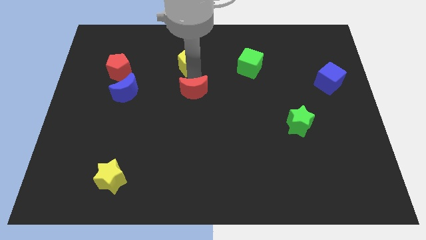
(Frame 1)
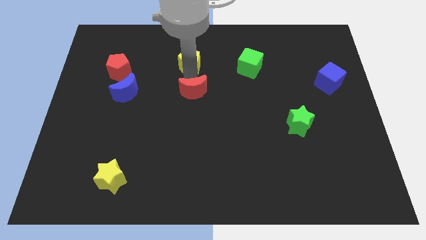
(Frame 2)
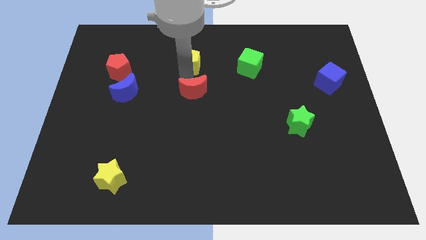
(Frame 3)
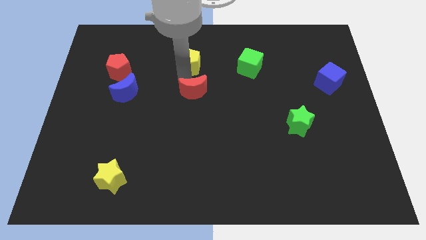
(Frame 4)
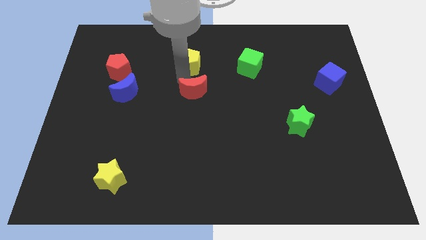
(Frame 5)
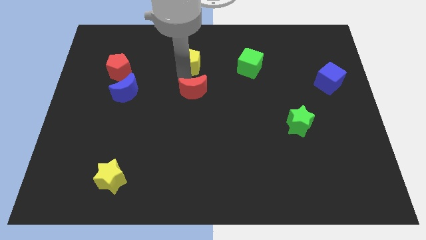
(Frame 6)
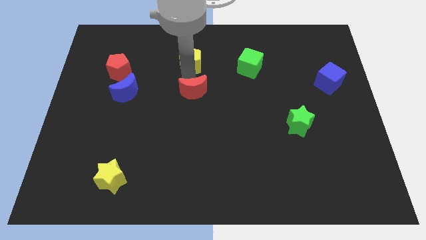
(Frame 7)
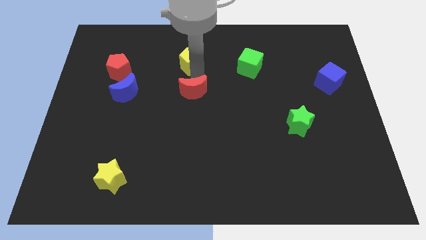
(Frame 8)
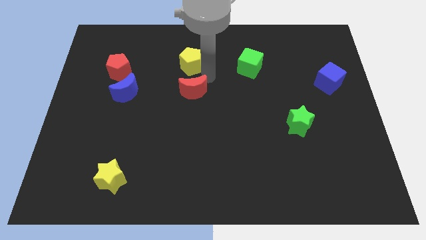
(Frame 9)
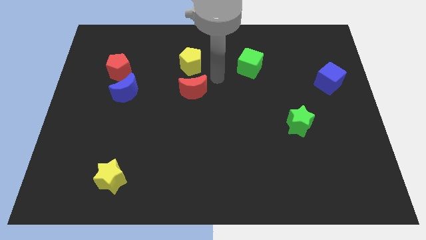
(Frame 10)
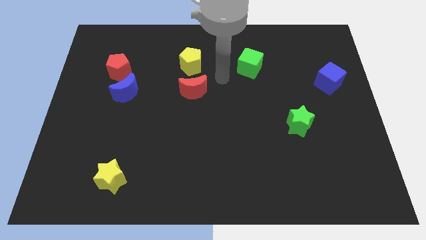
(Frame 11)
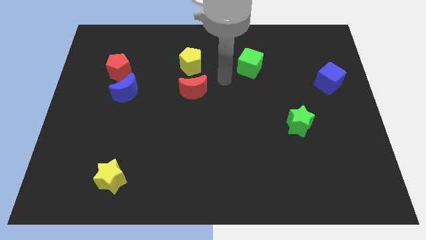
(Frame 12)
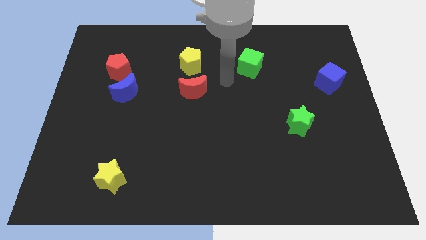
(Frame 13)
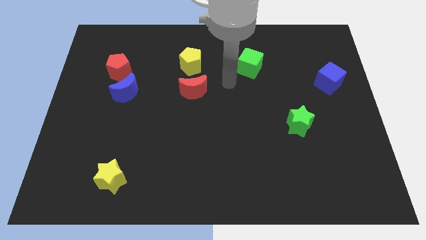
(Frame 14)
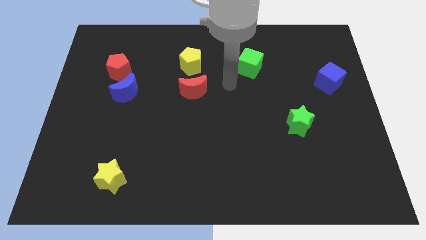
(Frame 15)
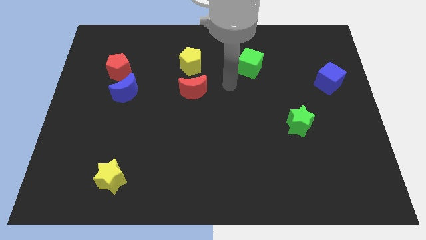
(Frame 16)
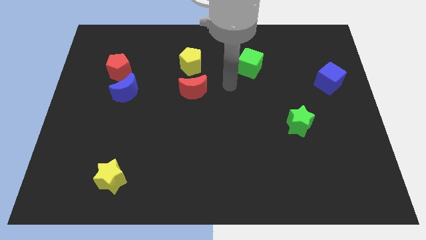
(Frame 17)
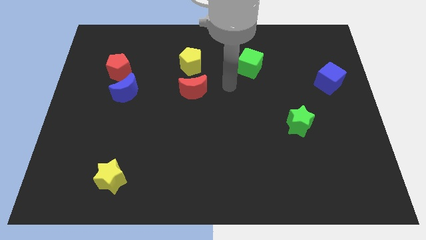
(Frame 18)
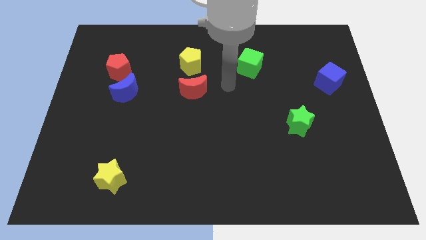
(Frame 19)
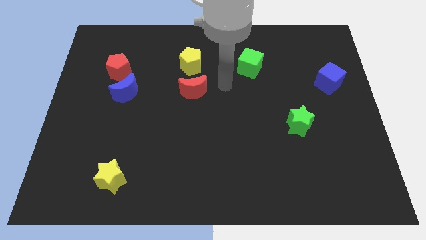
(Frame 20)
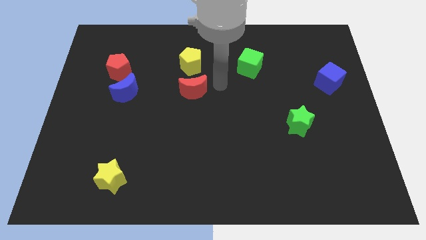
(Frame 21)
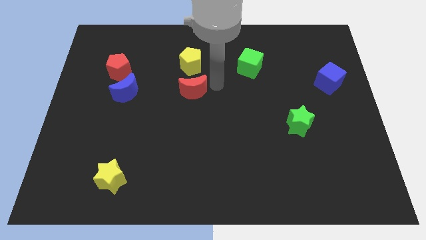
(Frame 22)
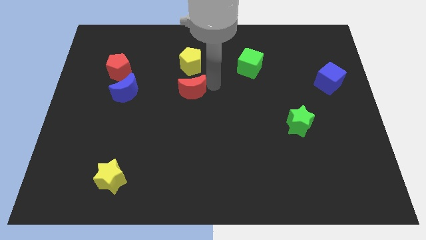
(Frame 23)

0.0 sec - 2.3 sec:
place the red moon below the yellow pentagon

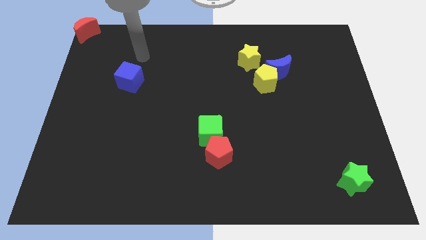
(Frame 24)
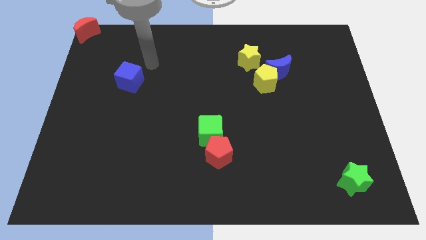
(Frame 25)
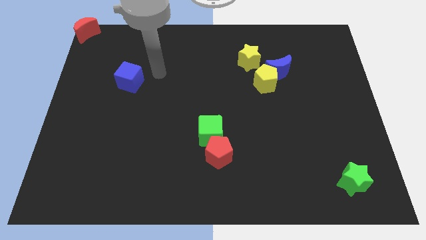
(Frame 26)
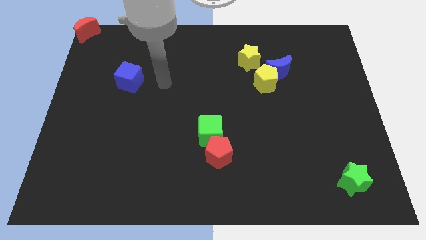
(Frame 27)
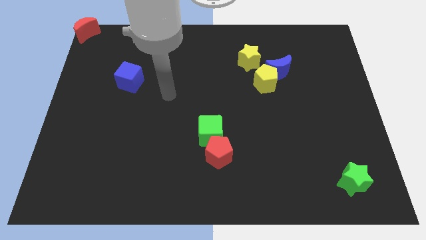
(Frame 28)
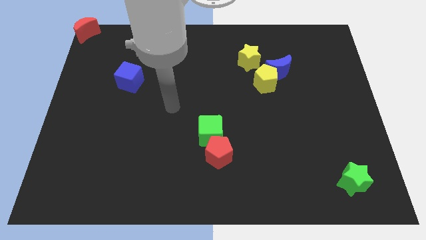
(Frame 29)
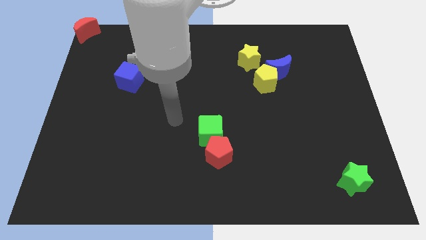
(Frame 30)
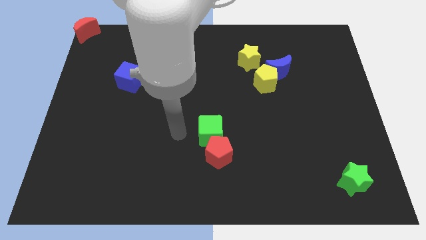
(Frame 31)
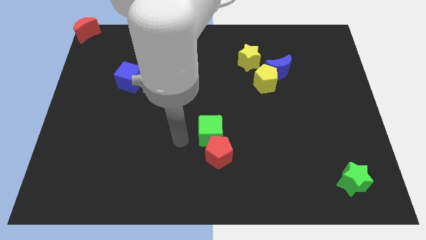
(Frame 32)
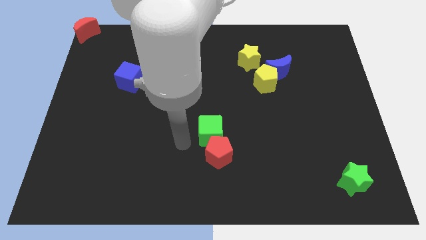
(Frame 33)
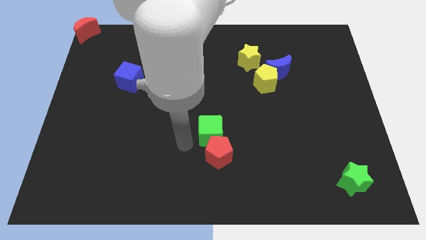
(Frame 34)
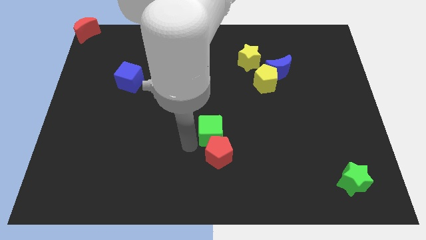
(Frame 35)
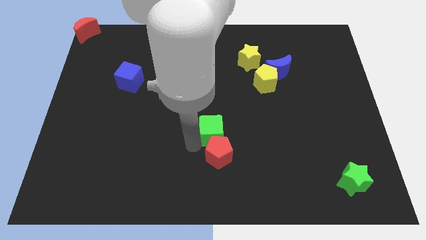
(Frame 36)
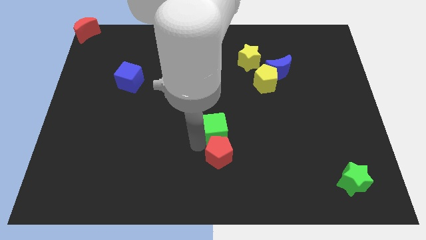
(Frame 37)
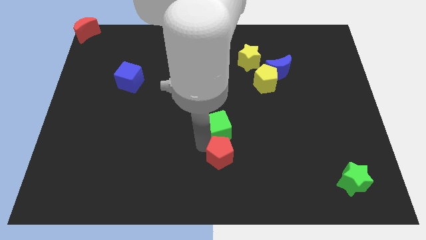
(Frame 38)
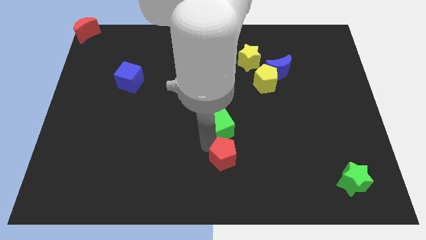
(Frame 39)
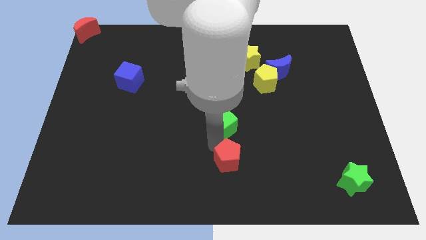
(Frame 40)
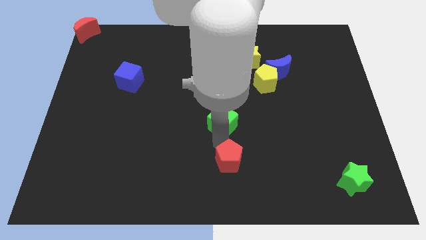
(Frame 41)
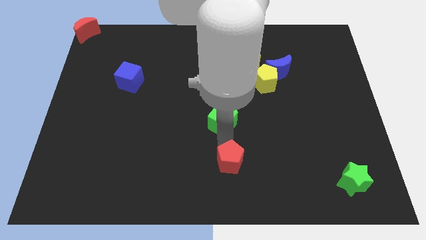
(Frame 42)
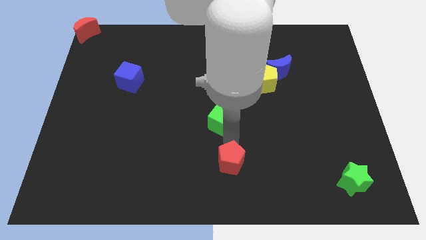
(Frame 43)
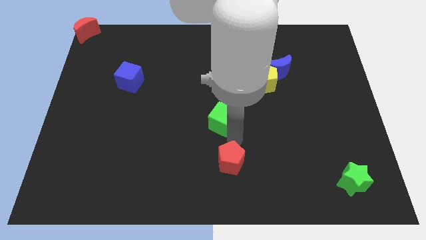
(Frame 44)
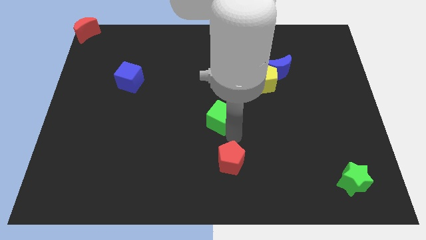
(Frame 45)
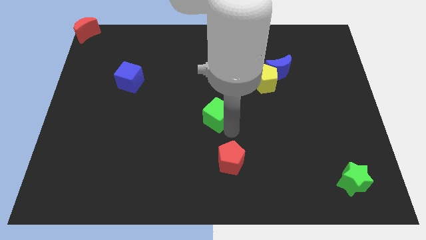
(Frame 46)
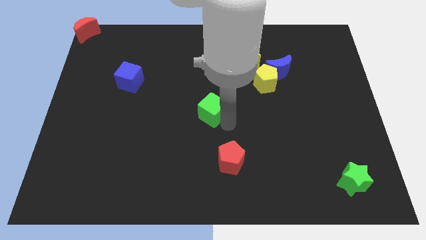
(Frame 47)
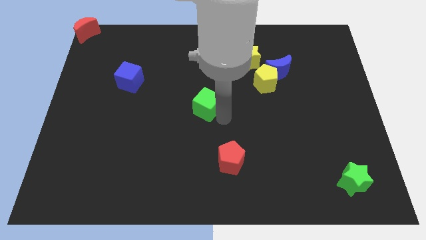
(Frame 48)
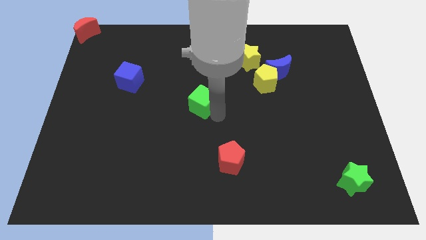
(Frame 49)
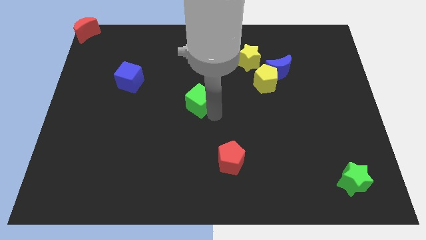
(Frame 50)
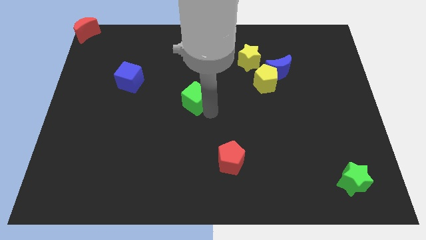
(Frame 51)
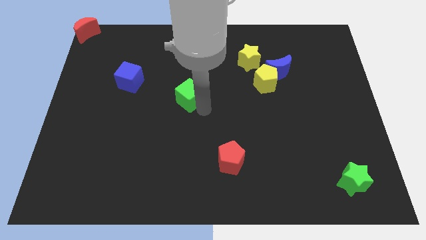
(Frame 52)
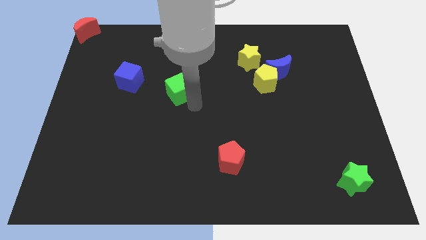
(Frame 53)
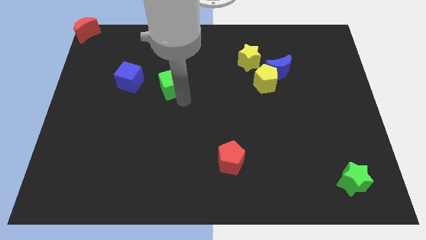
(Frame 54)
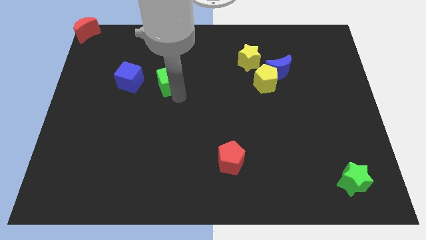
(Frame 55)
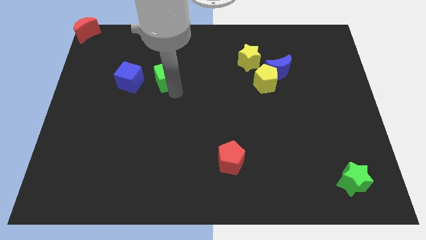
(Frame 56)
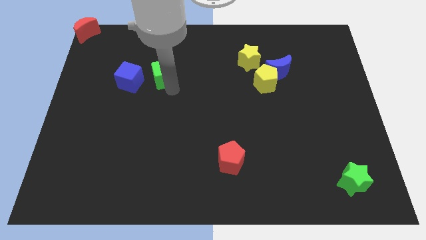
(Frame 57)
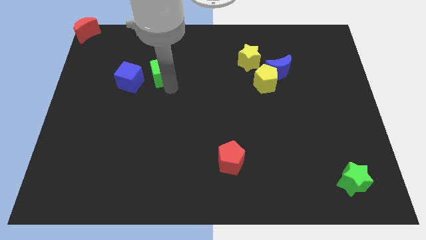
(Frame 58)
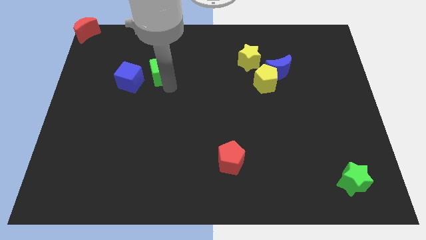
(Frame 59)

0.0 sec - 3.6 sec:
place the green cube in between the blue cube and yellow star

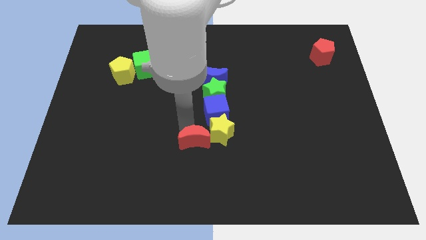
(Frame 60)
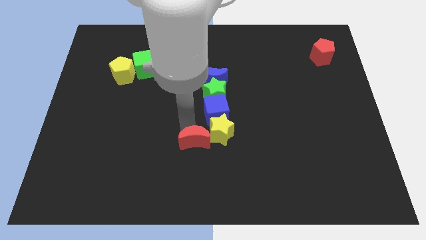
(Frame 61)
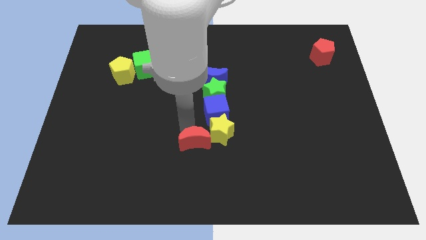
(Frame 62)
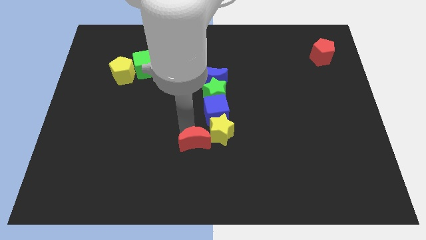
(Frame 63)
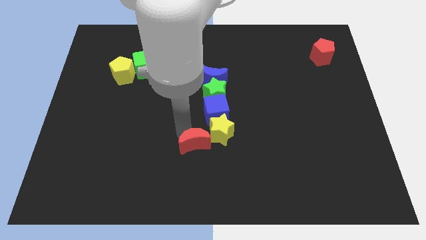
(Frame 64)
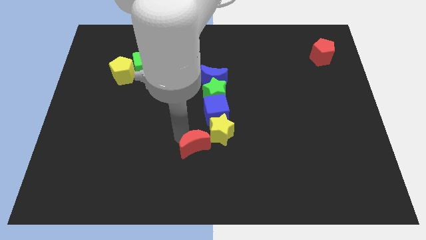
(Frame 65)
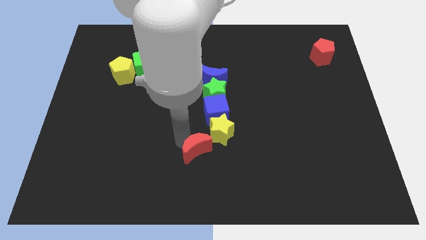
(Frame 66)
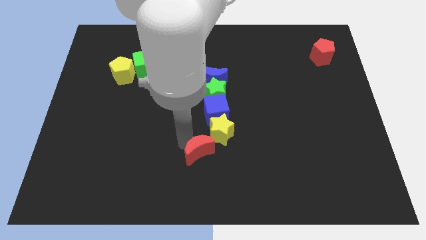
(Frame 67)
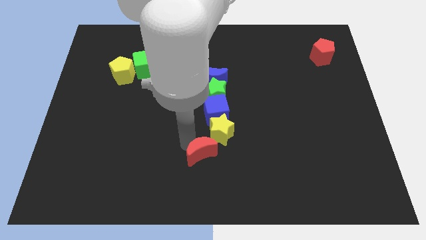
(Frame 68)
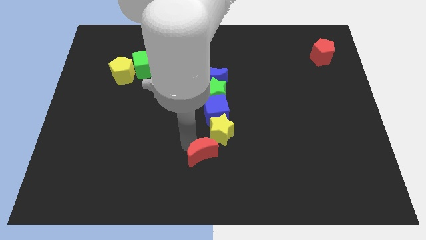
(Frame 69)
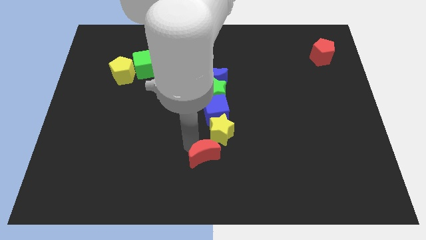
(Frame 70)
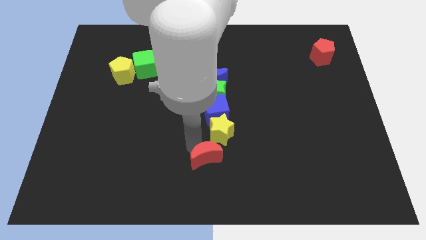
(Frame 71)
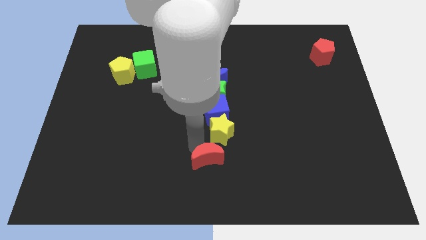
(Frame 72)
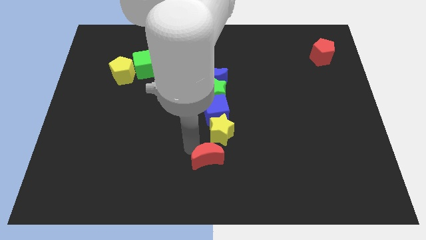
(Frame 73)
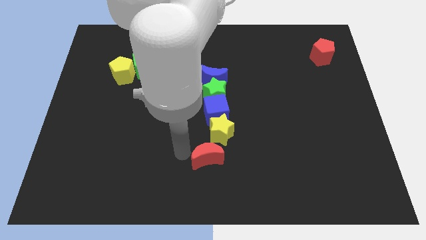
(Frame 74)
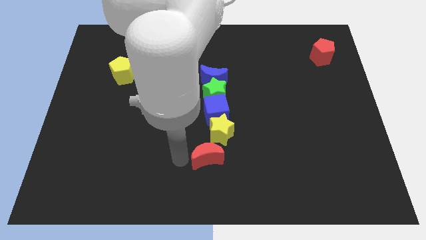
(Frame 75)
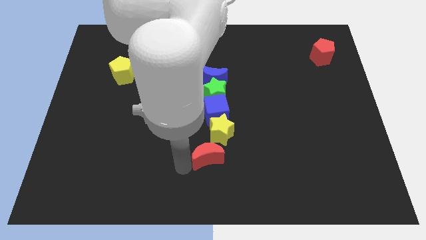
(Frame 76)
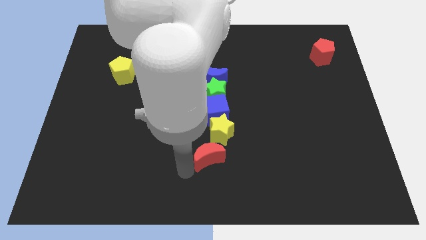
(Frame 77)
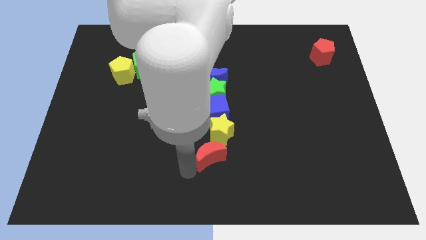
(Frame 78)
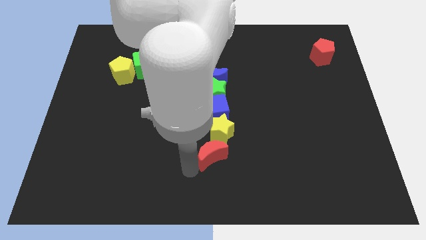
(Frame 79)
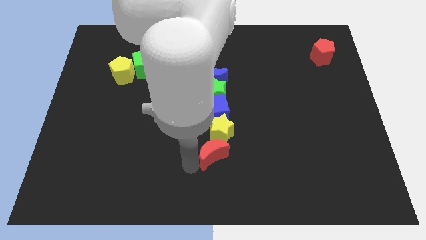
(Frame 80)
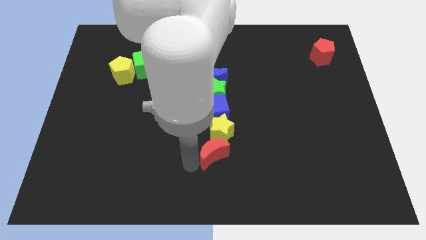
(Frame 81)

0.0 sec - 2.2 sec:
move the red moon to the bottom side of the yellow star

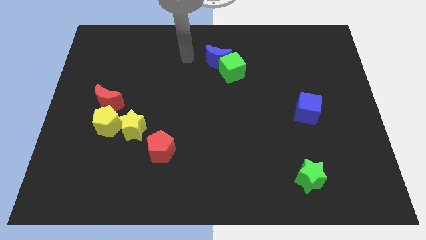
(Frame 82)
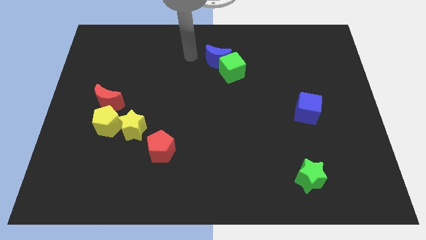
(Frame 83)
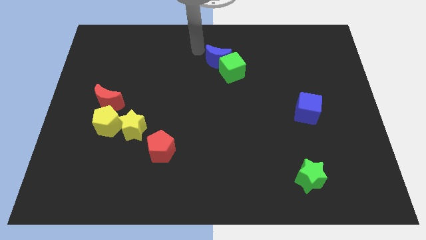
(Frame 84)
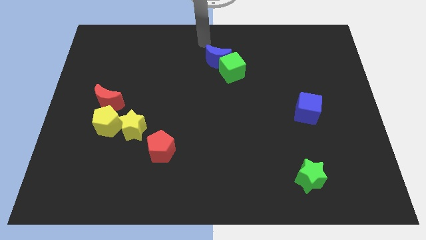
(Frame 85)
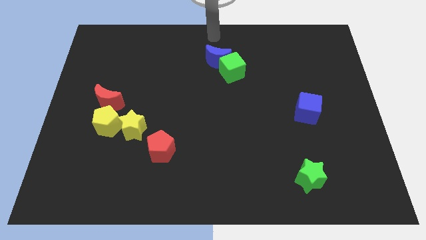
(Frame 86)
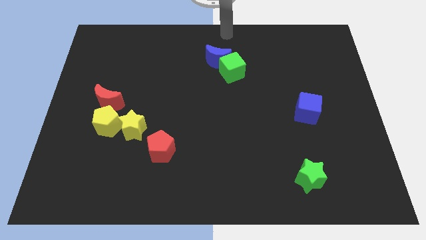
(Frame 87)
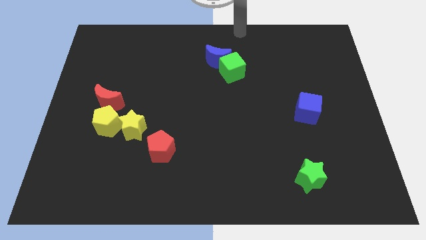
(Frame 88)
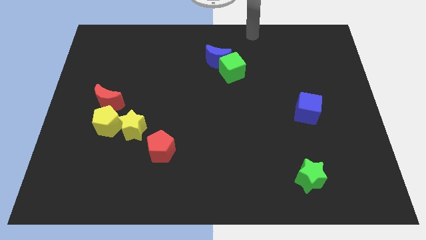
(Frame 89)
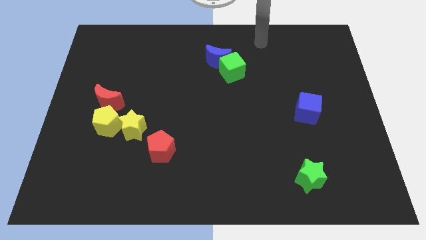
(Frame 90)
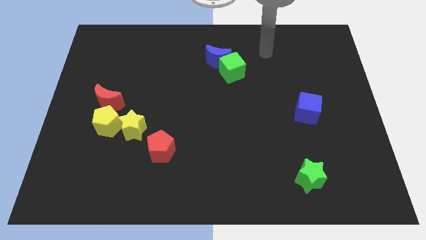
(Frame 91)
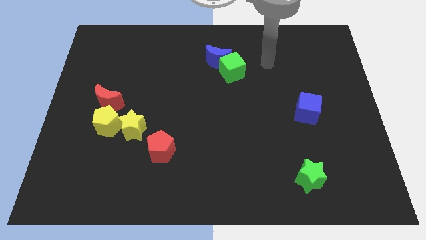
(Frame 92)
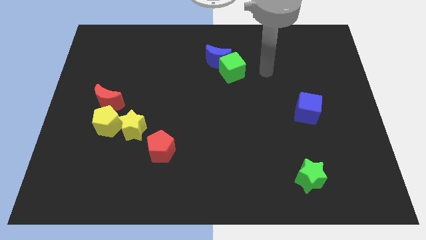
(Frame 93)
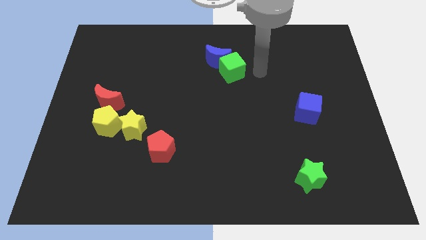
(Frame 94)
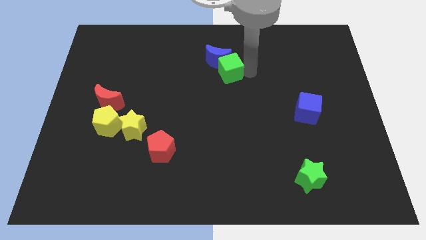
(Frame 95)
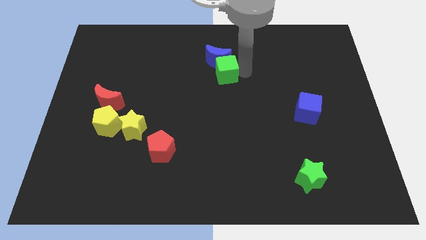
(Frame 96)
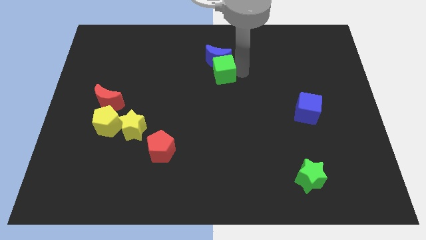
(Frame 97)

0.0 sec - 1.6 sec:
move the green cube slightly to the left
